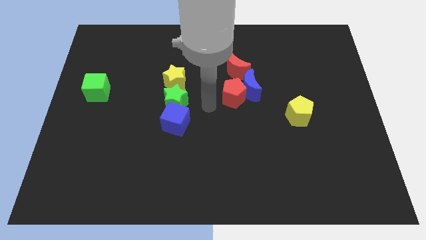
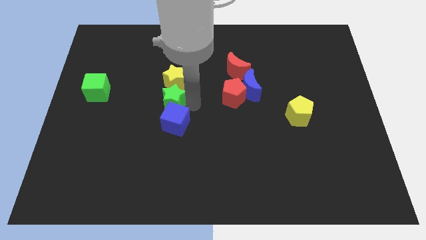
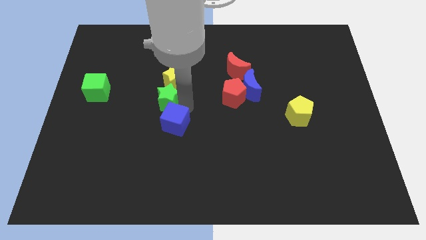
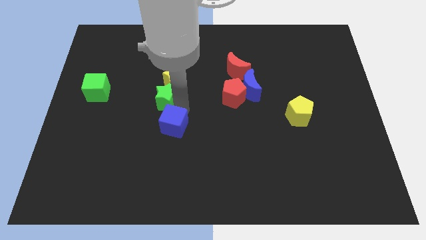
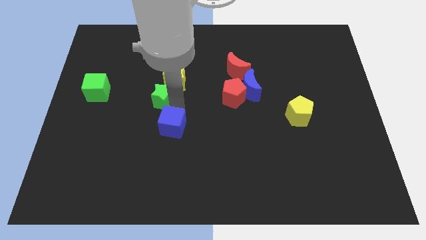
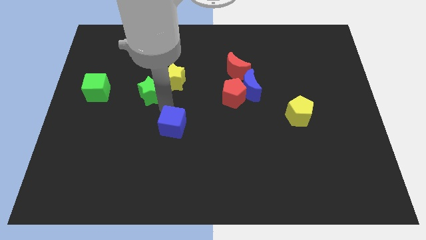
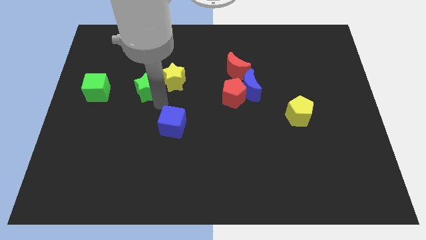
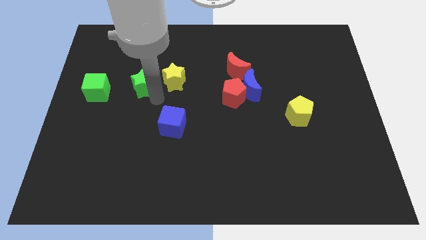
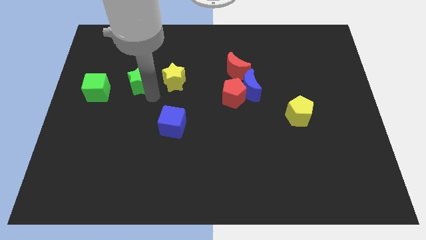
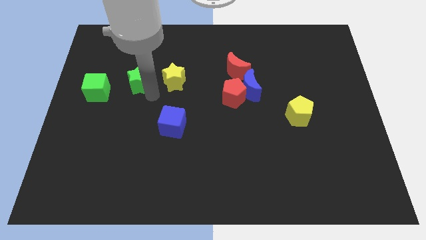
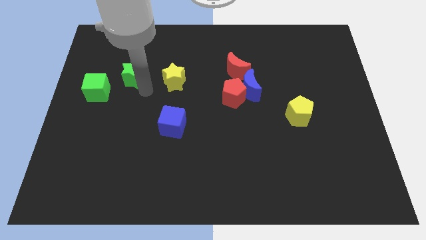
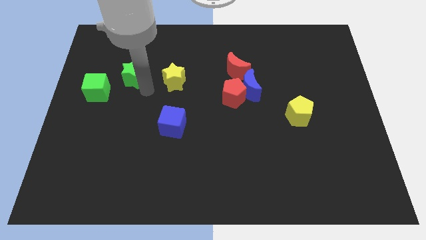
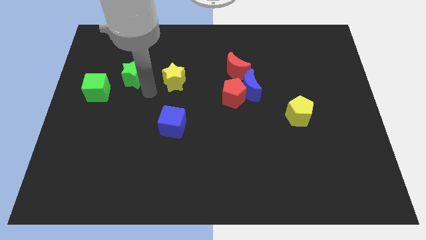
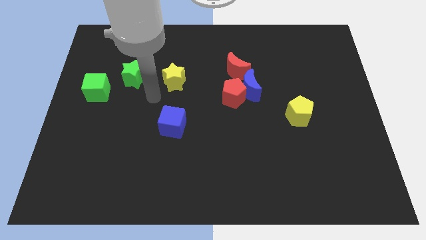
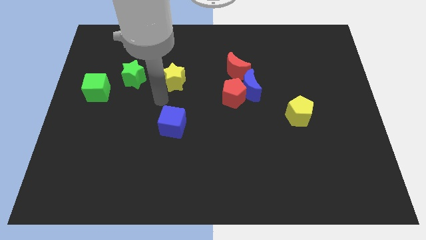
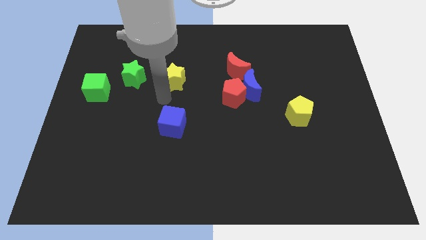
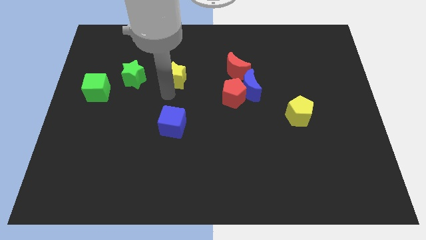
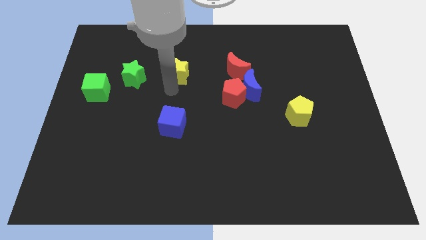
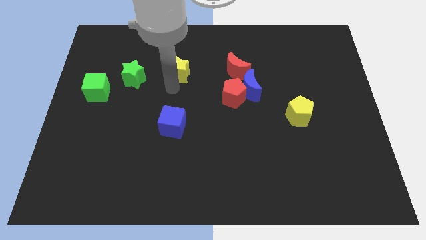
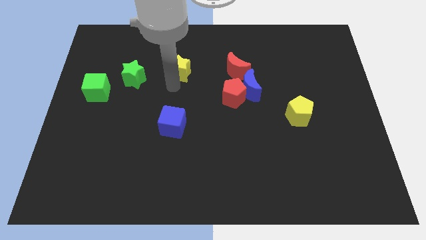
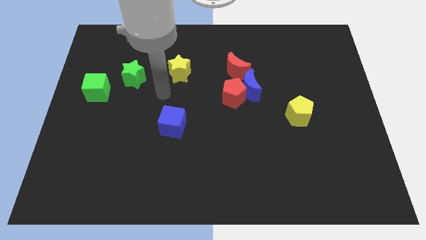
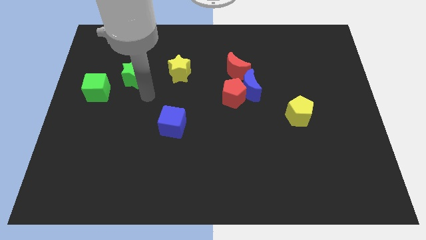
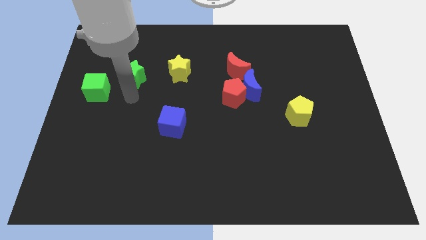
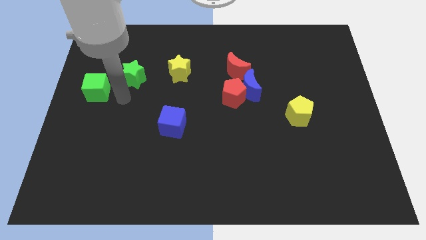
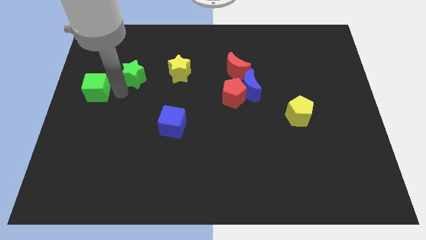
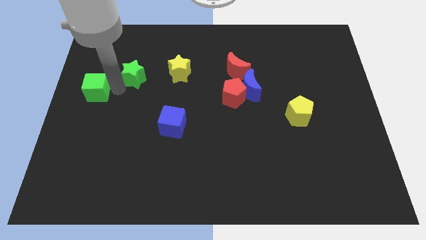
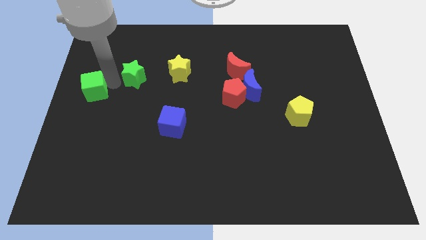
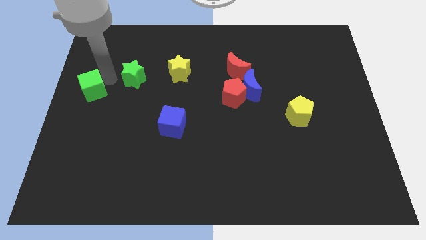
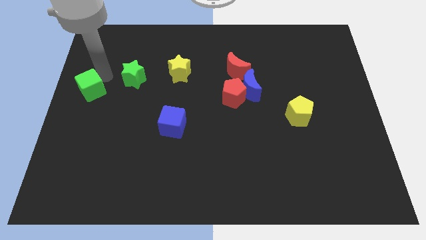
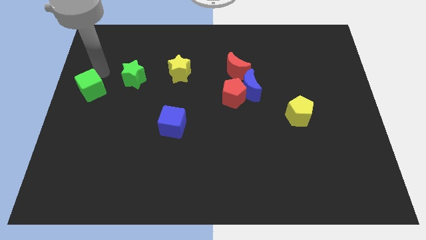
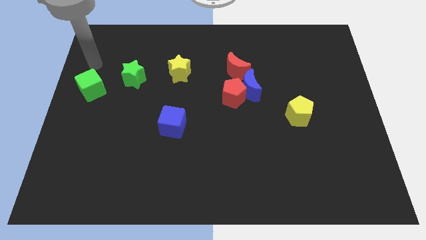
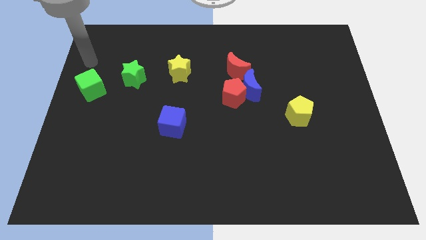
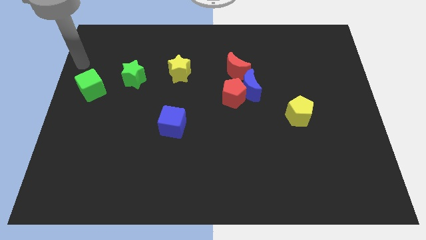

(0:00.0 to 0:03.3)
place the green star between green cube and yellow star

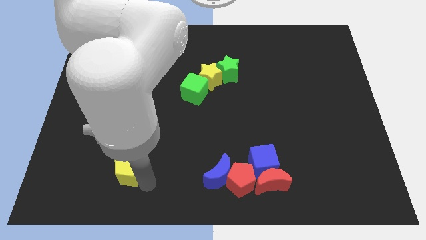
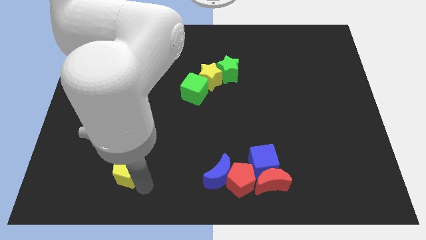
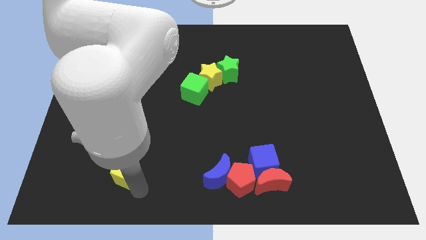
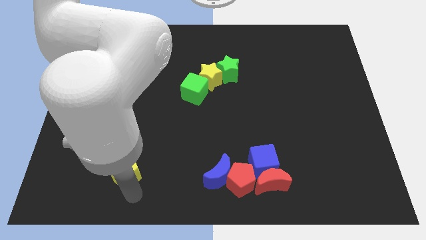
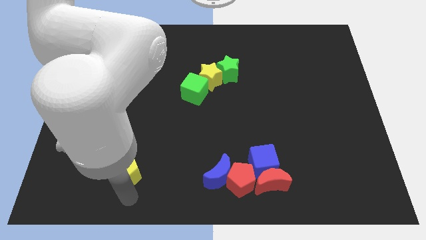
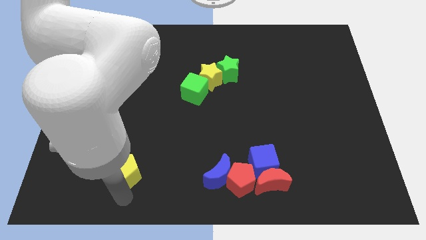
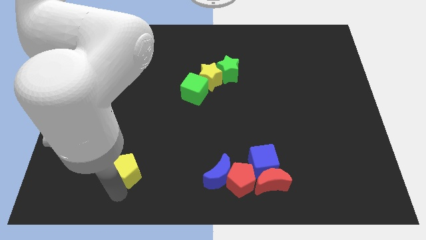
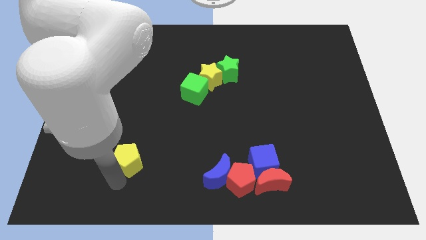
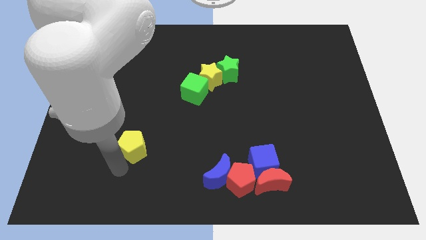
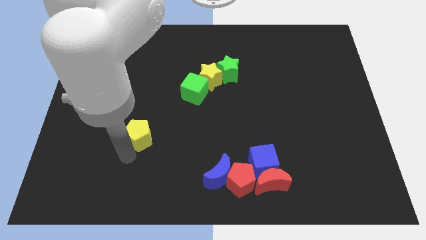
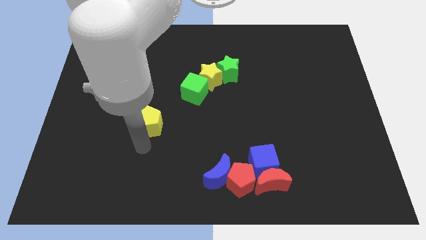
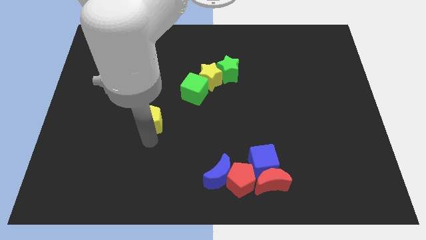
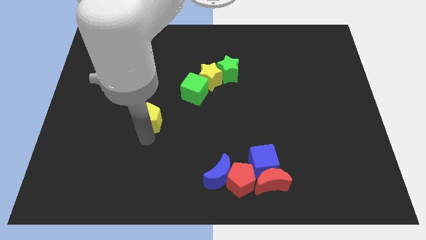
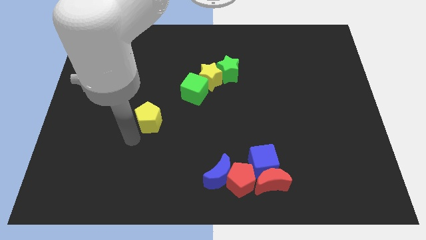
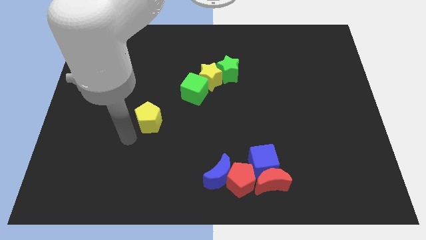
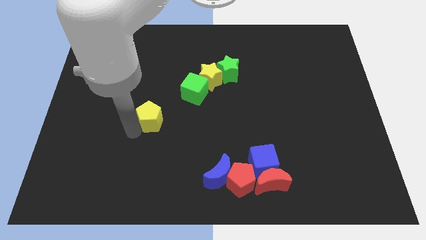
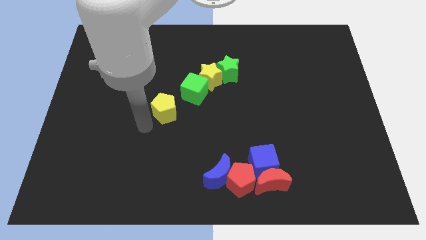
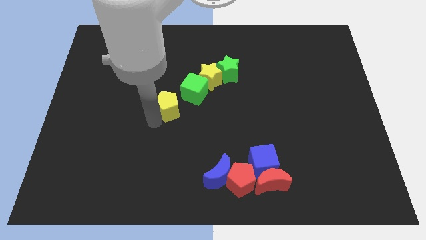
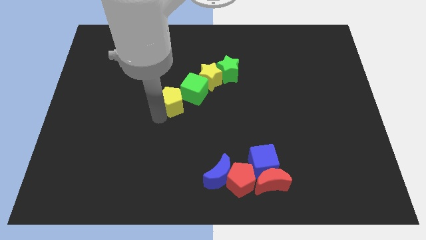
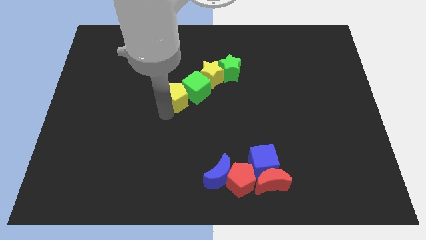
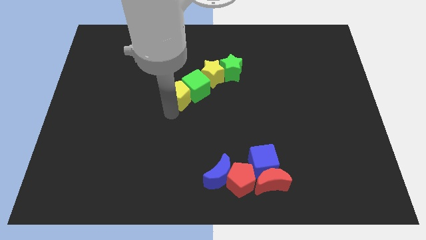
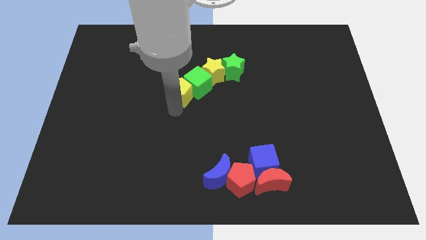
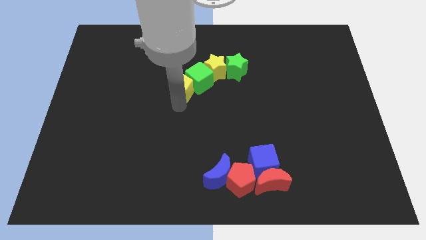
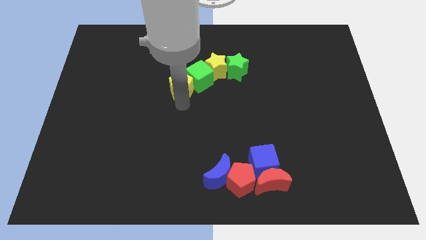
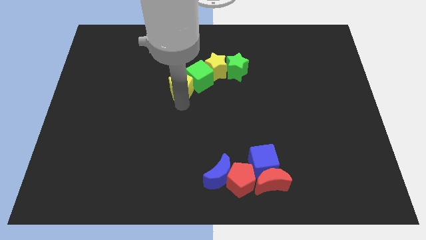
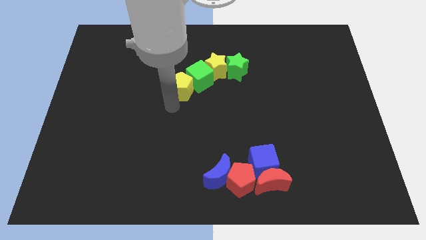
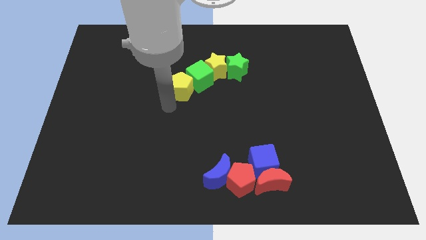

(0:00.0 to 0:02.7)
push the yellow pentagon into the group of blocks

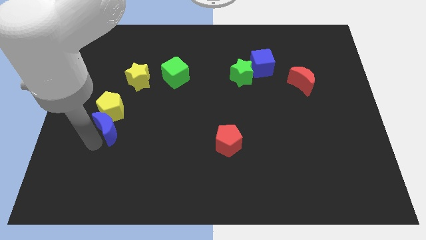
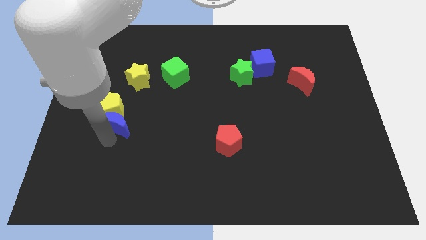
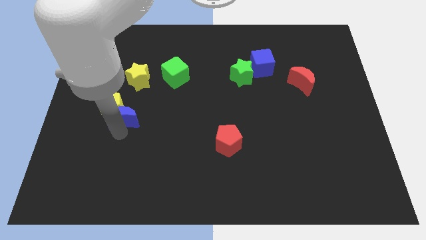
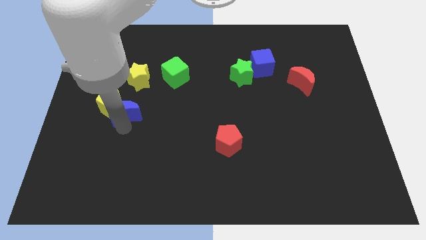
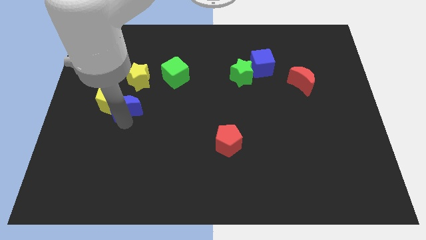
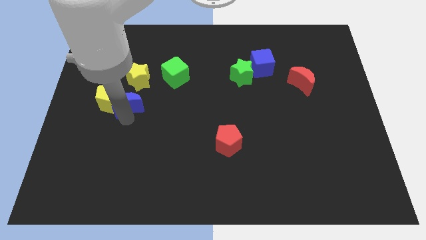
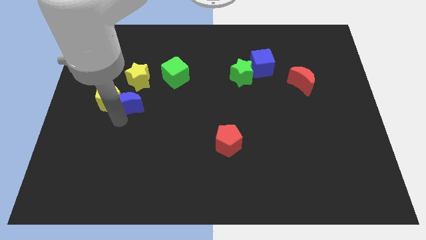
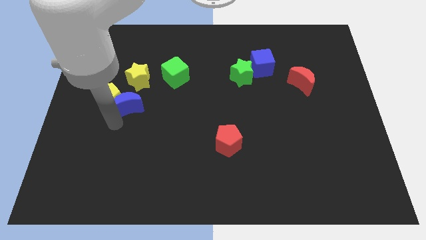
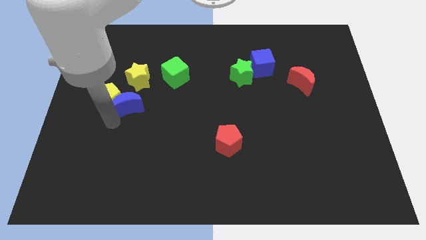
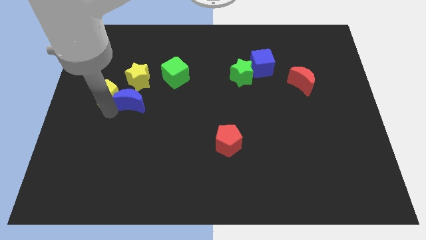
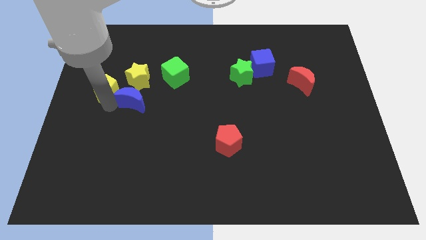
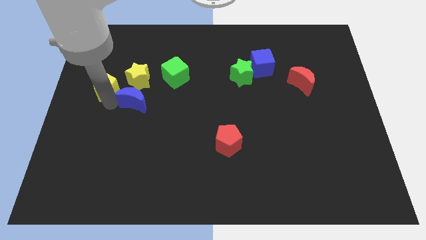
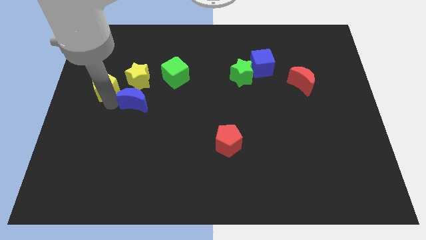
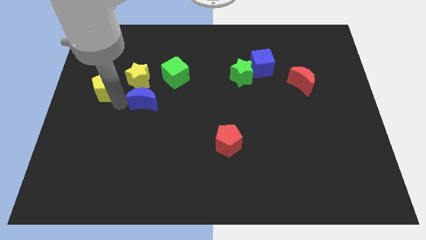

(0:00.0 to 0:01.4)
place blue crescent below yellow star

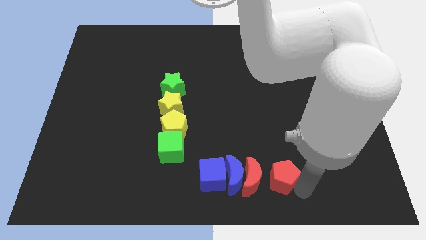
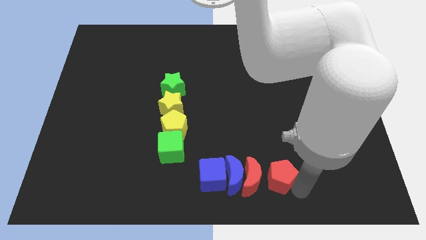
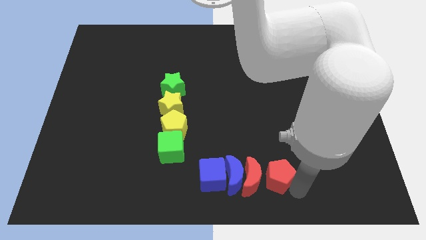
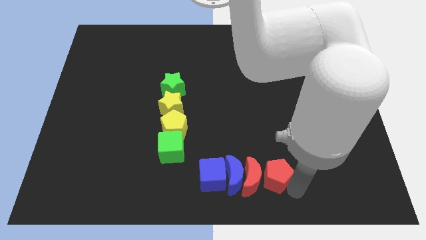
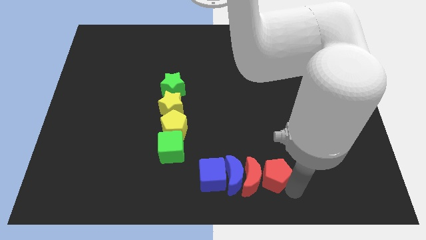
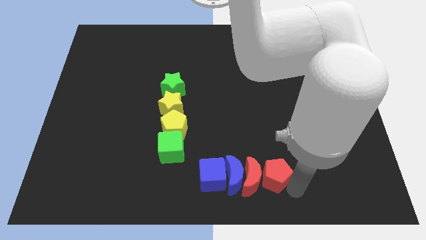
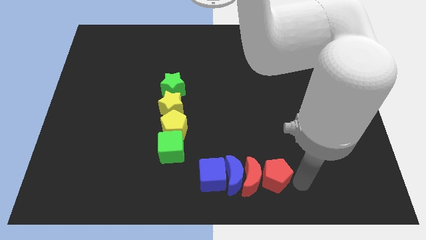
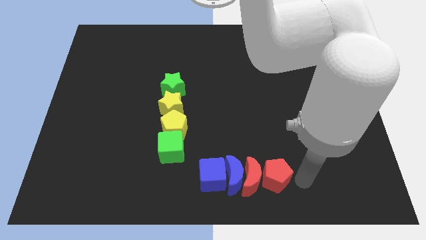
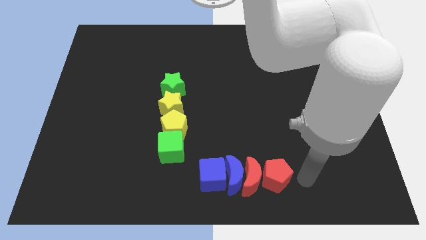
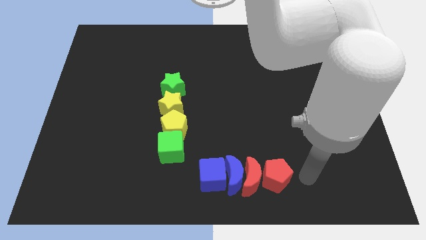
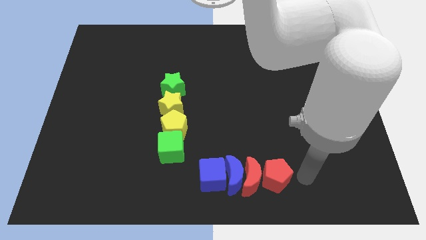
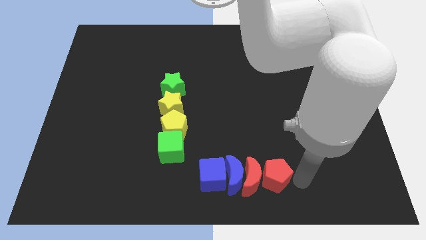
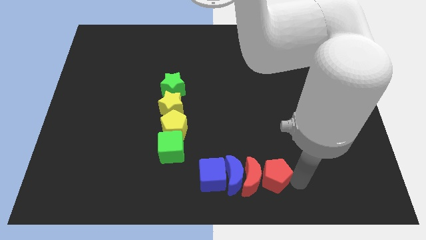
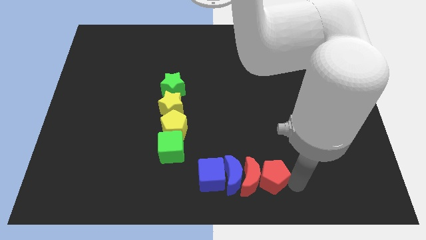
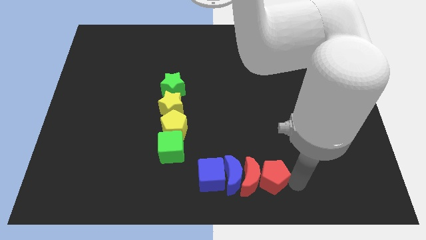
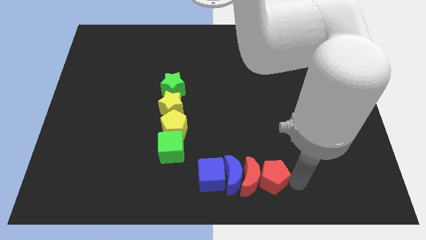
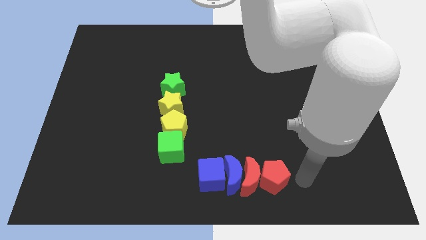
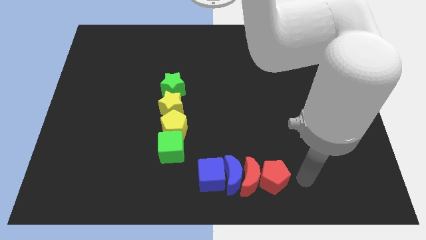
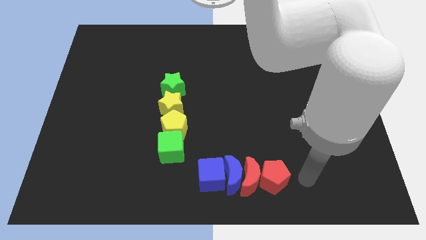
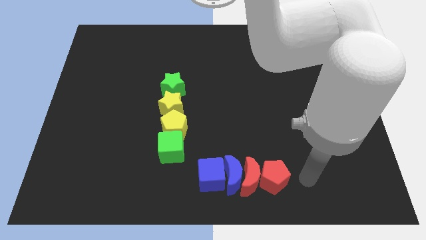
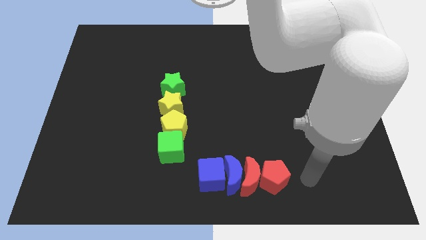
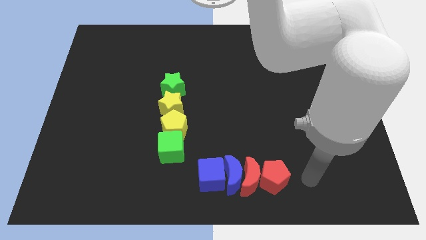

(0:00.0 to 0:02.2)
push the red pentagon into the red crescent
